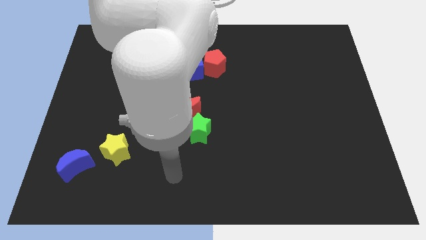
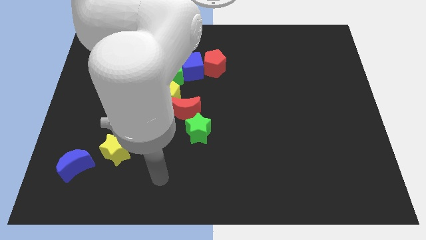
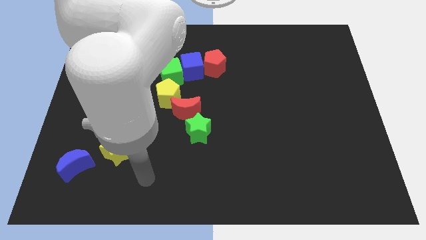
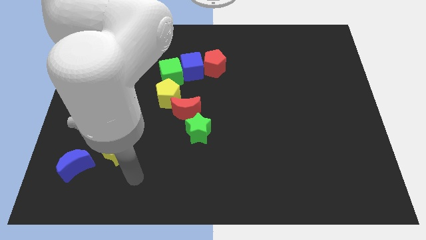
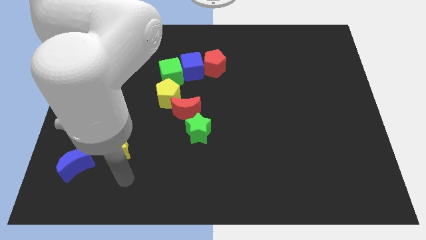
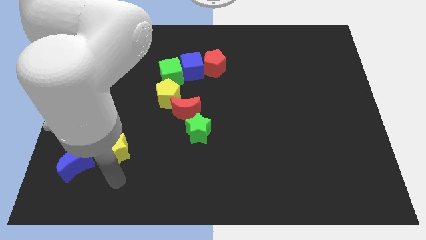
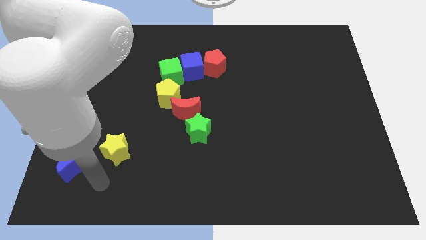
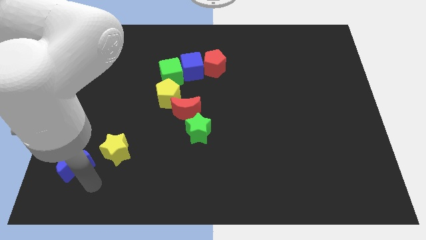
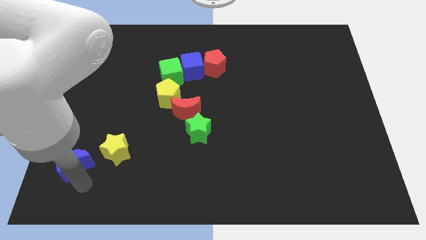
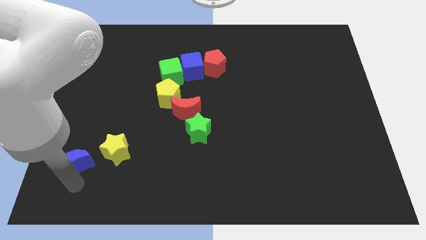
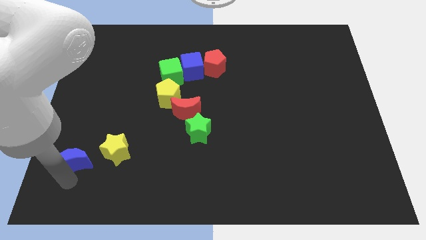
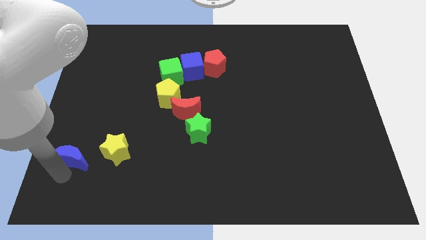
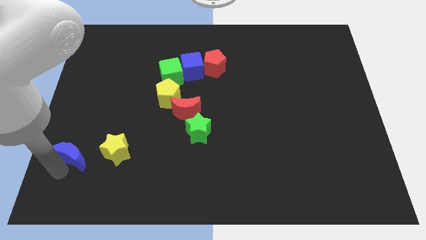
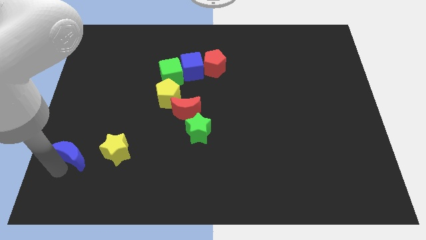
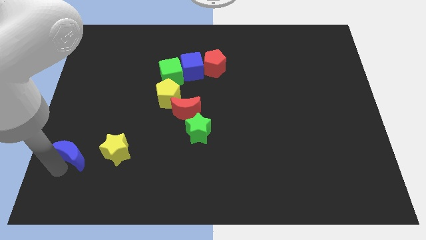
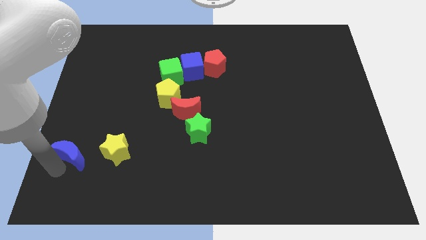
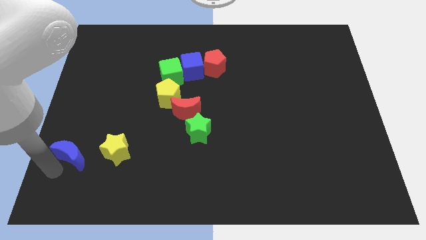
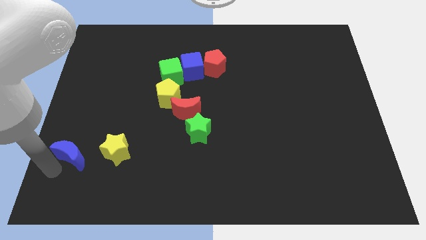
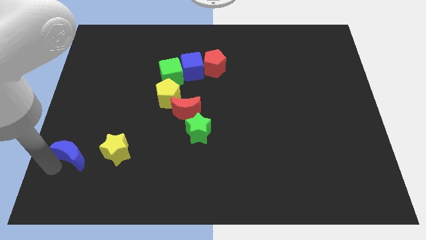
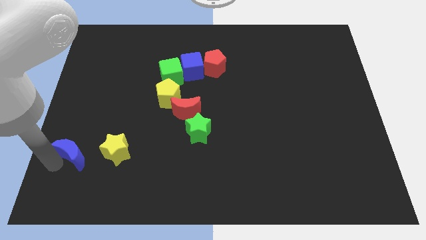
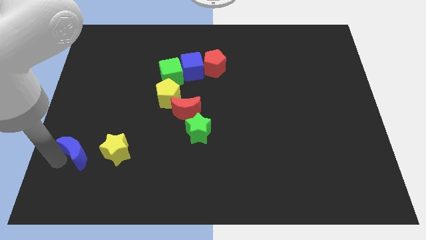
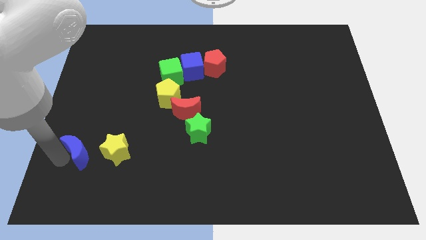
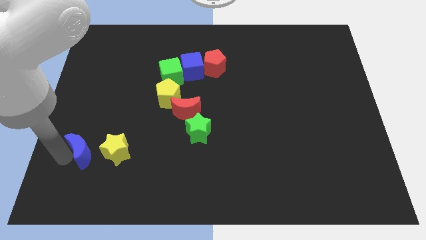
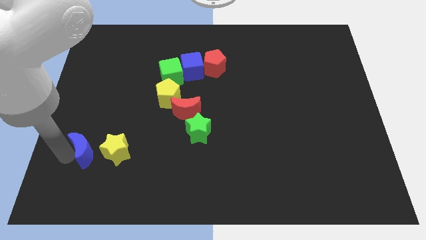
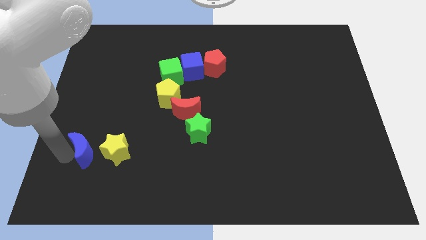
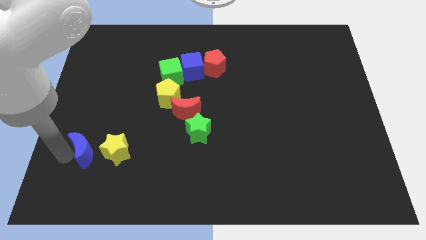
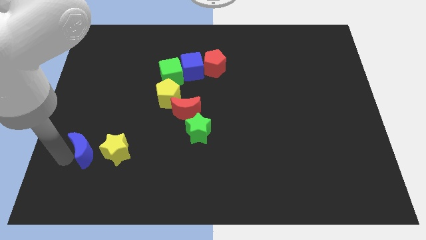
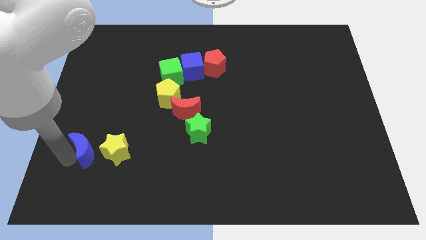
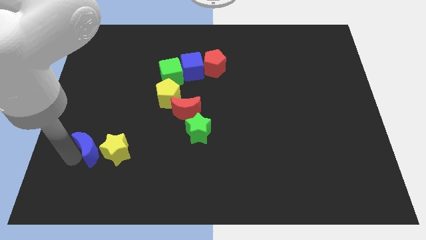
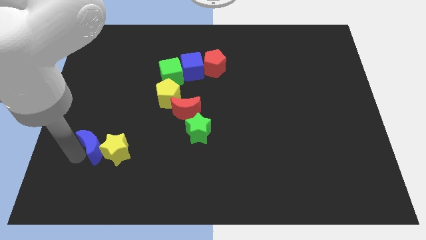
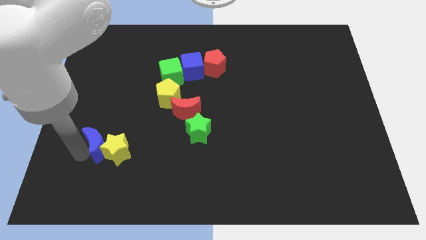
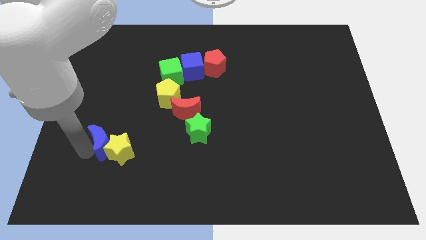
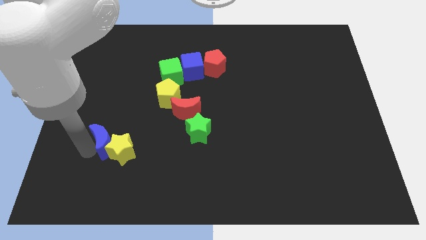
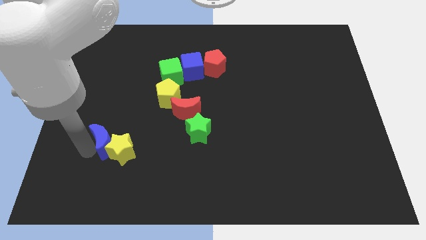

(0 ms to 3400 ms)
slide the blue moon to the top left side of the yellow star

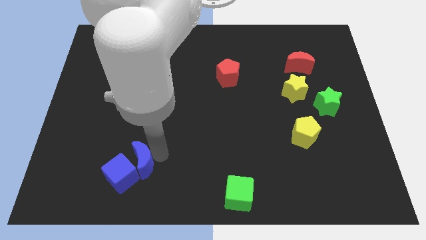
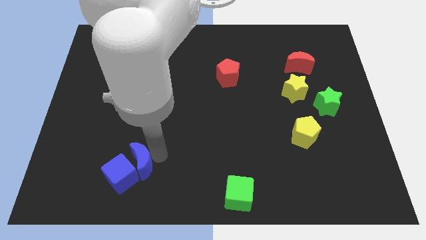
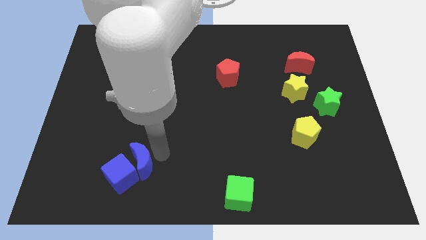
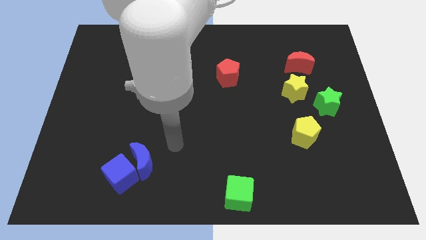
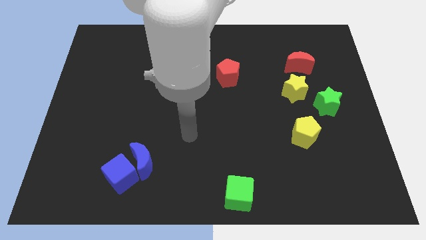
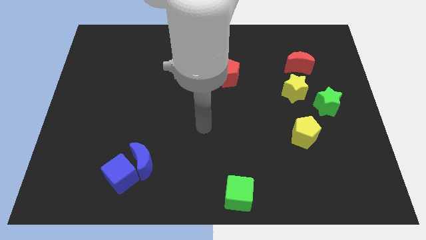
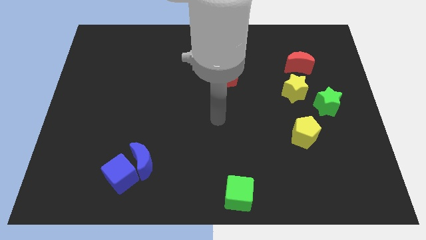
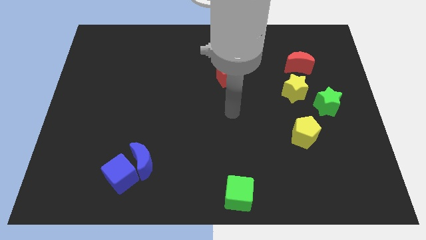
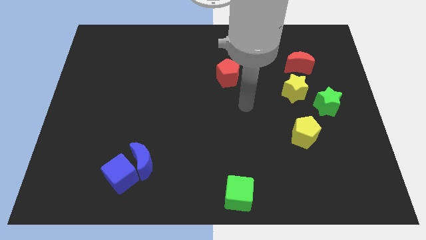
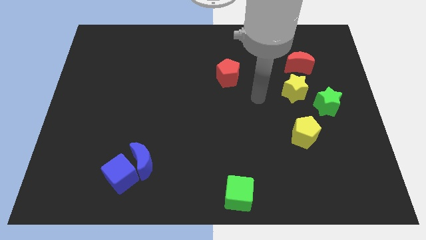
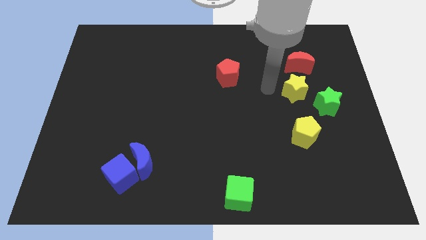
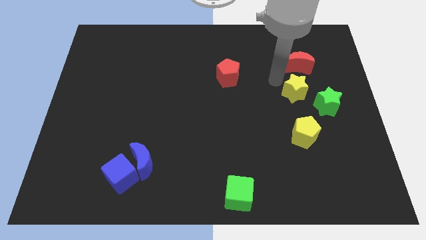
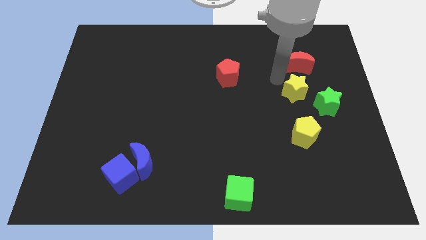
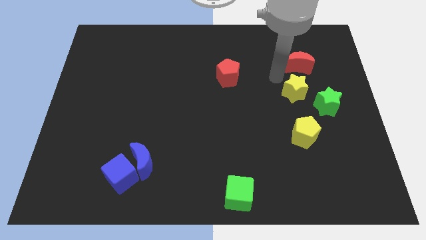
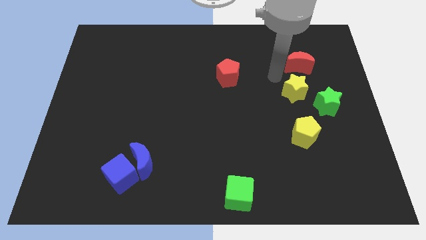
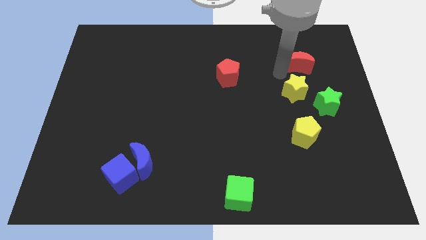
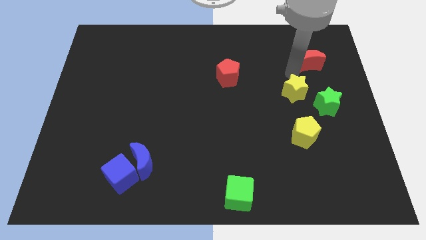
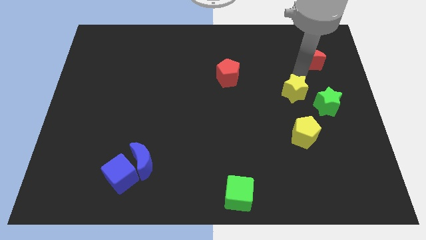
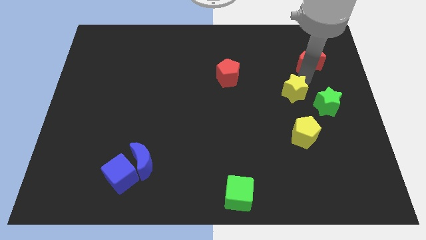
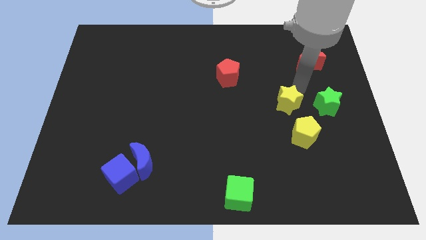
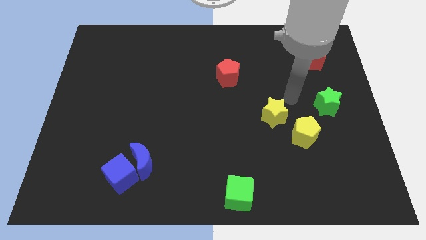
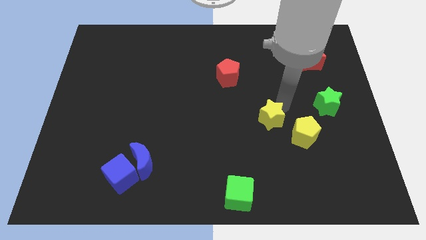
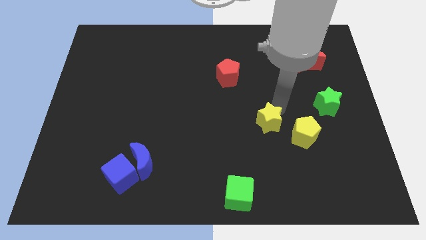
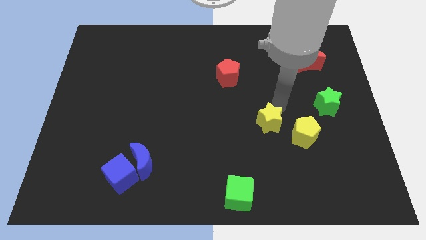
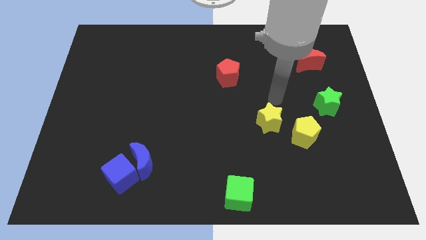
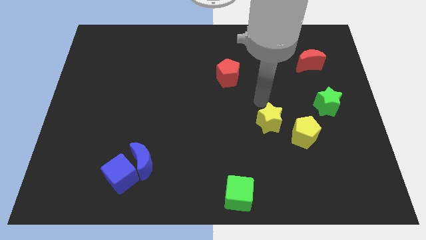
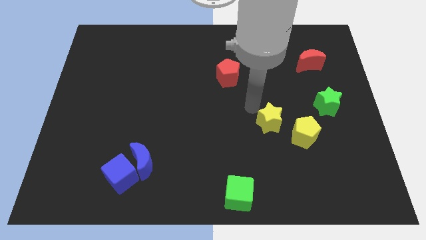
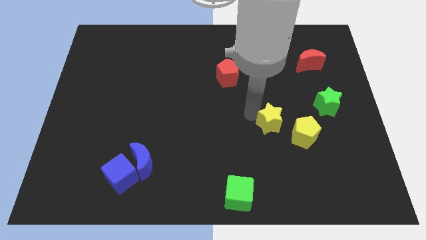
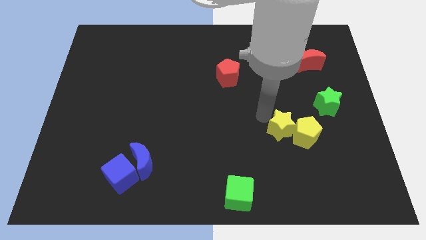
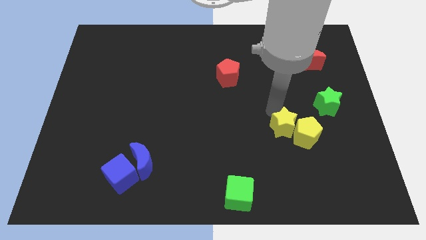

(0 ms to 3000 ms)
place the yellow star to the left of the yellow pentagon

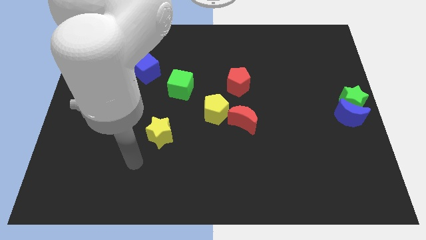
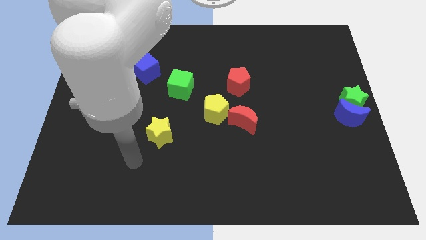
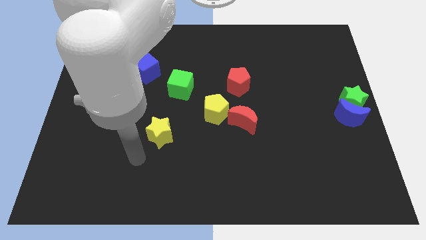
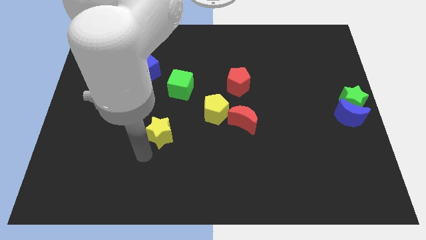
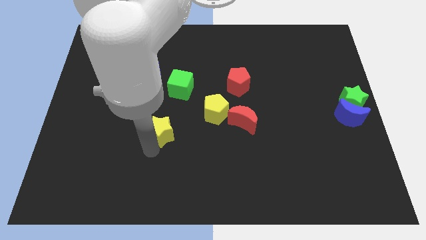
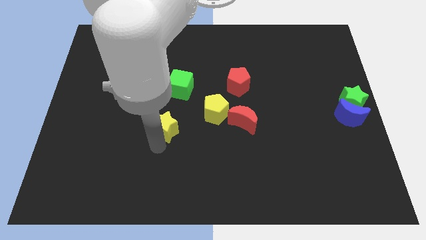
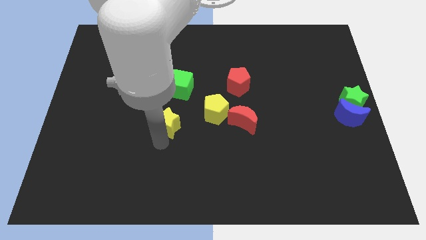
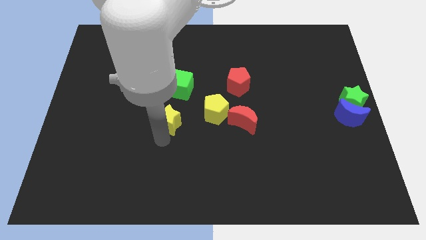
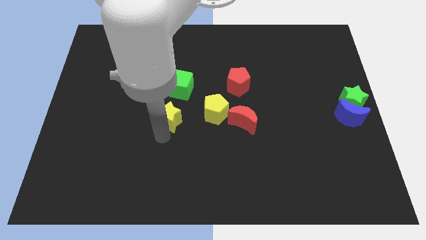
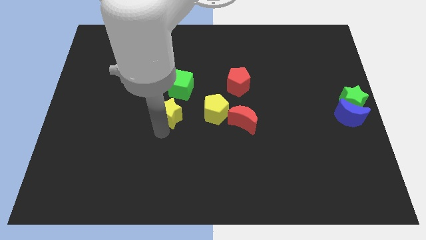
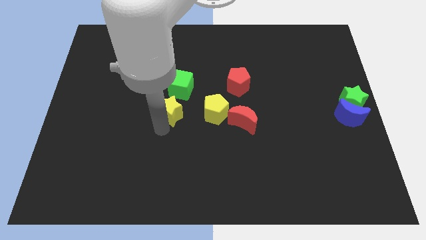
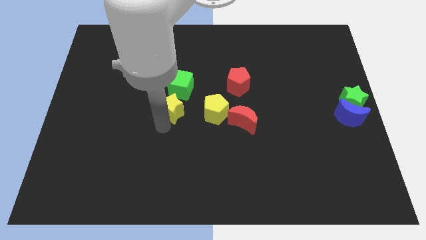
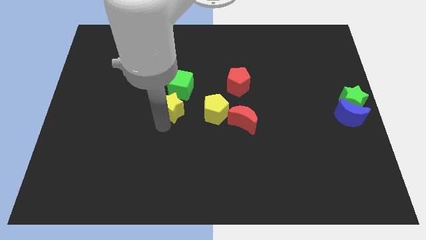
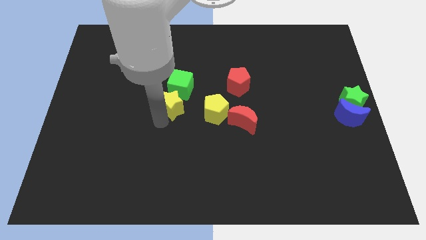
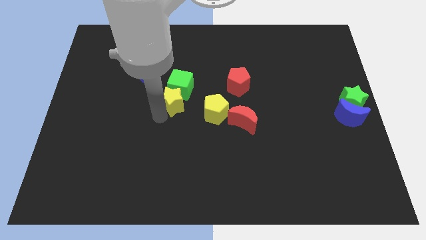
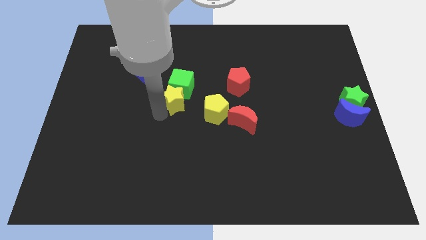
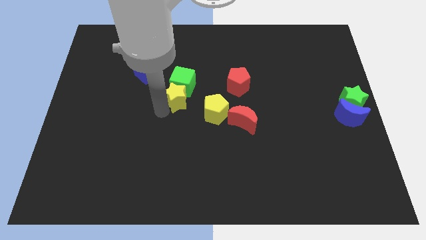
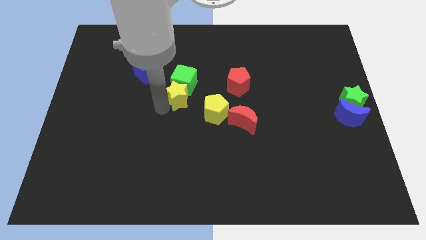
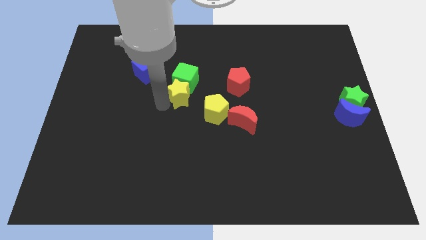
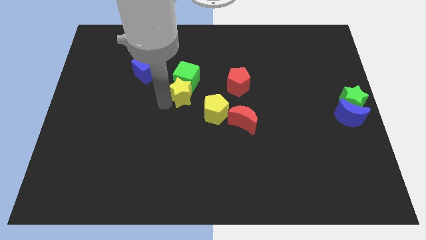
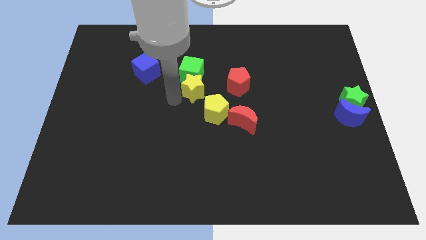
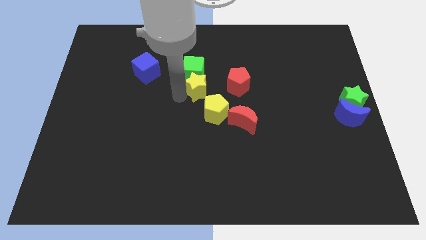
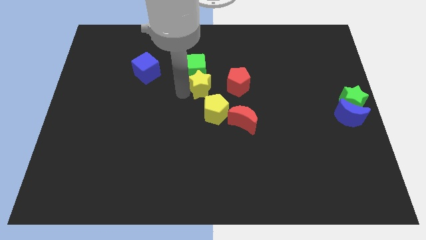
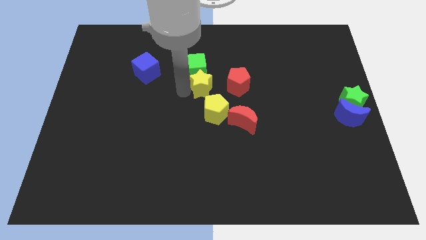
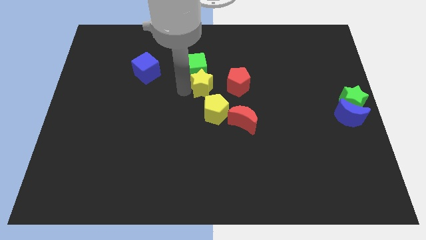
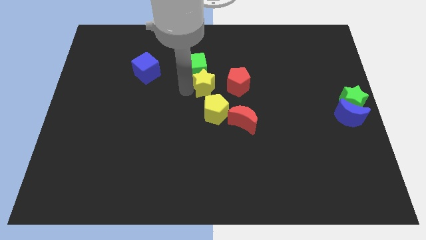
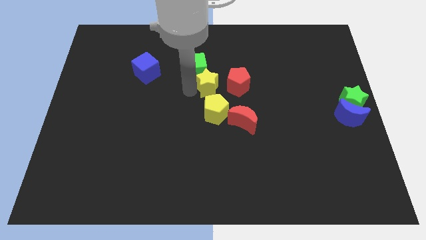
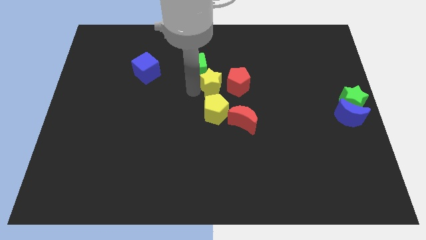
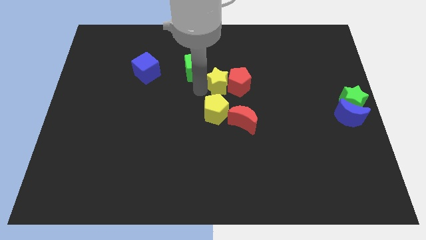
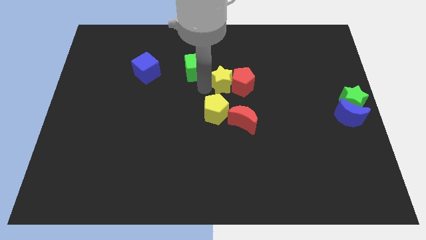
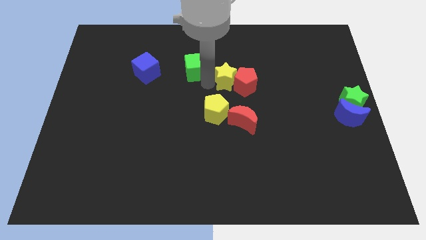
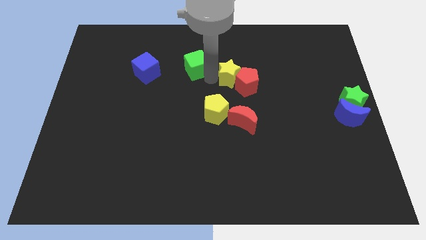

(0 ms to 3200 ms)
place the yellow star left to the red pentagon
